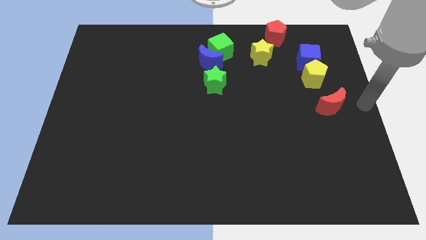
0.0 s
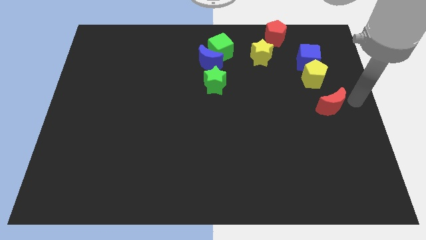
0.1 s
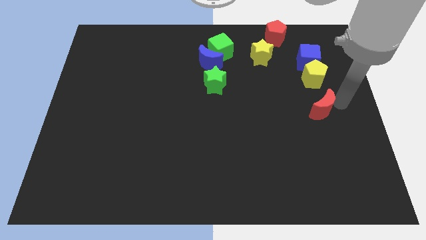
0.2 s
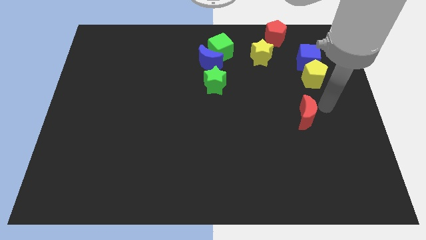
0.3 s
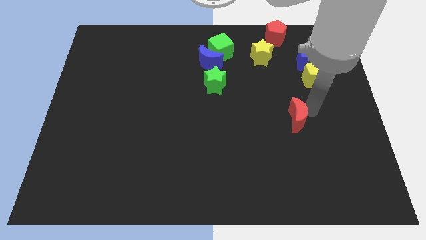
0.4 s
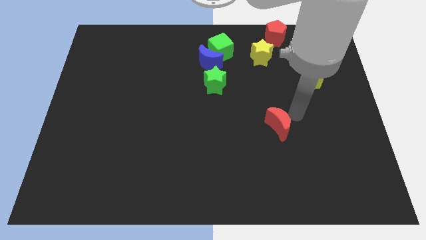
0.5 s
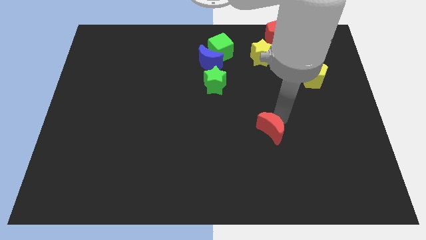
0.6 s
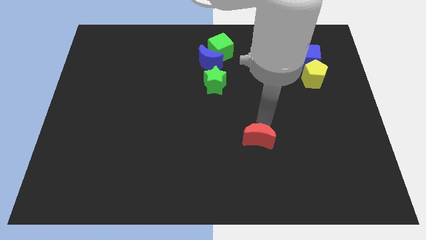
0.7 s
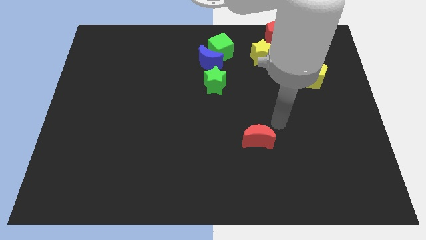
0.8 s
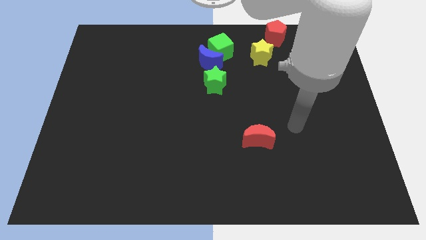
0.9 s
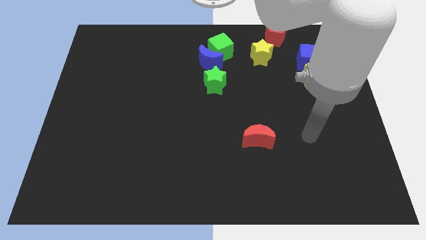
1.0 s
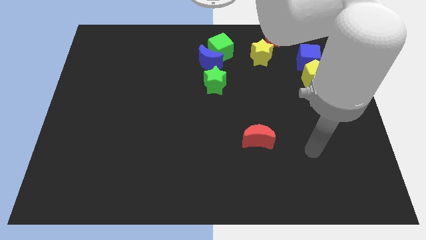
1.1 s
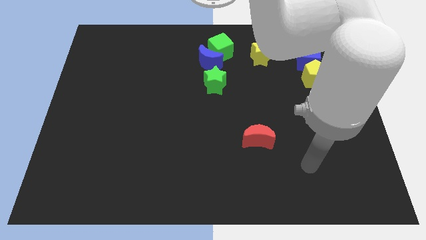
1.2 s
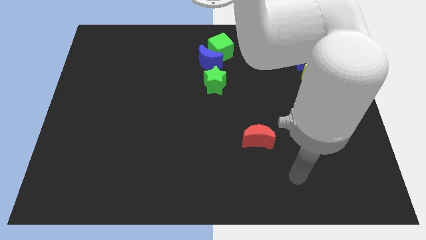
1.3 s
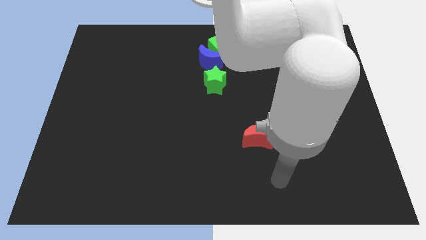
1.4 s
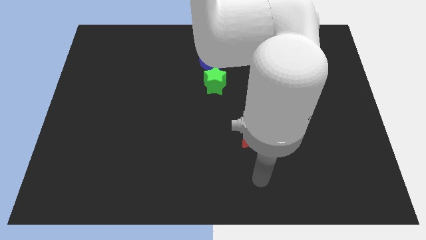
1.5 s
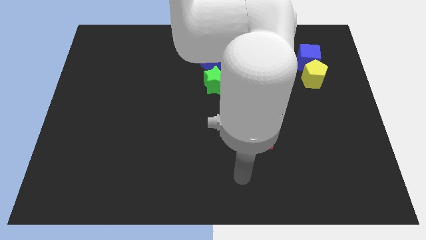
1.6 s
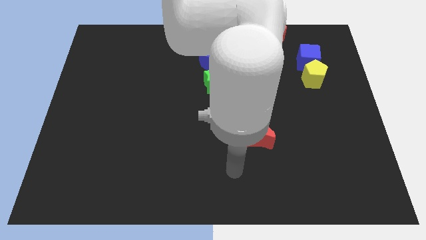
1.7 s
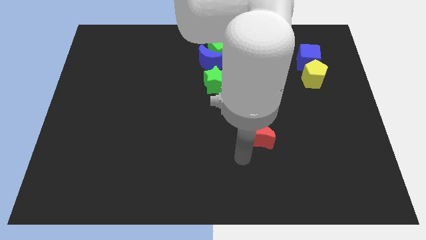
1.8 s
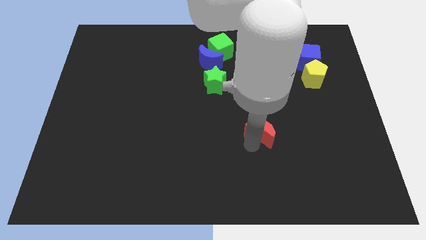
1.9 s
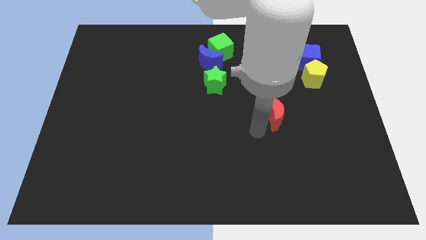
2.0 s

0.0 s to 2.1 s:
move the red crescent away from the yellow pentagon

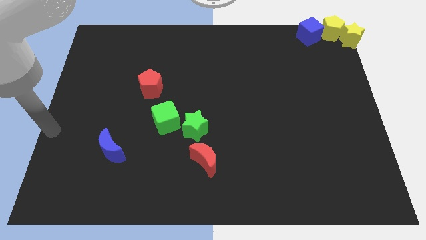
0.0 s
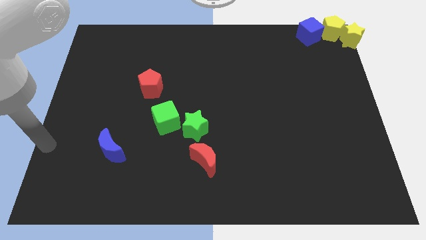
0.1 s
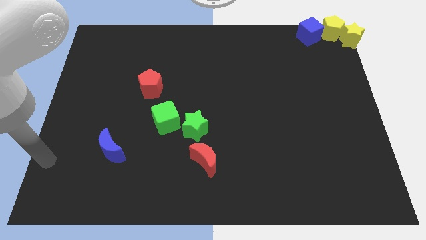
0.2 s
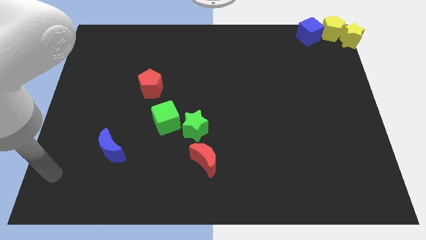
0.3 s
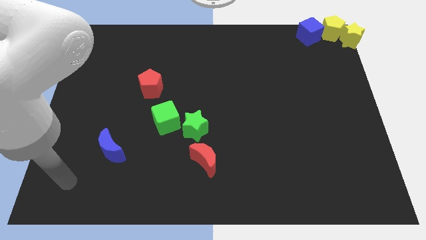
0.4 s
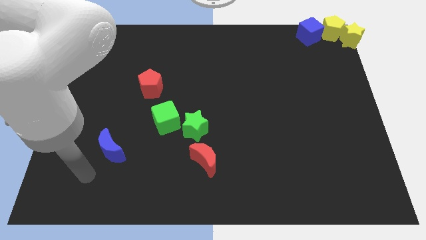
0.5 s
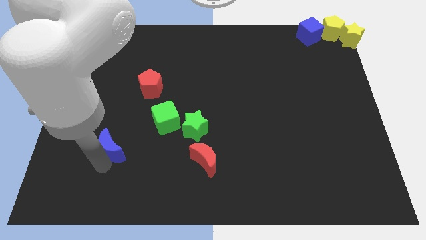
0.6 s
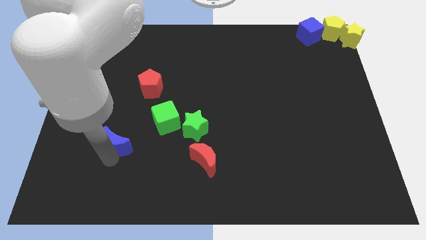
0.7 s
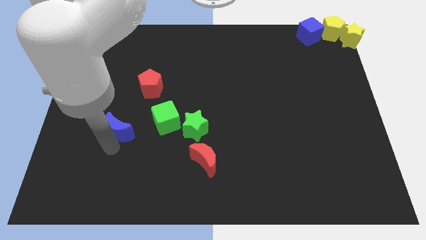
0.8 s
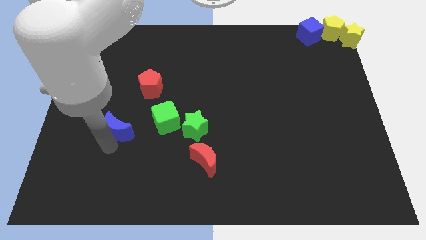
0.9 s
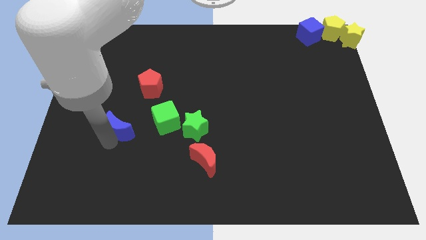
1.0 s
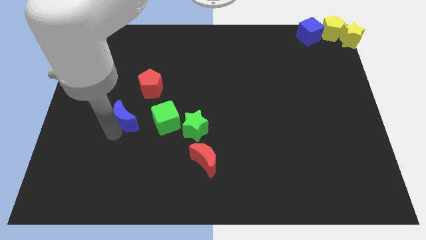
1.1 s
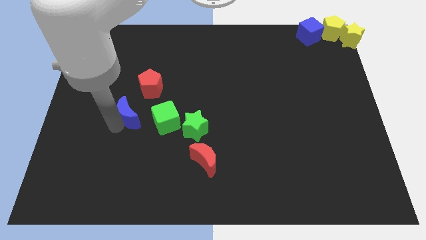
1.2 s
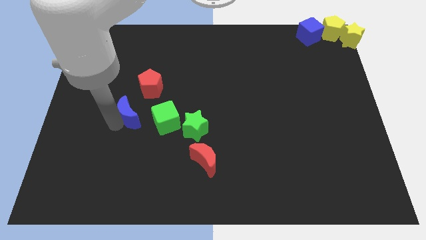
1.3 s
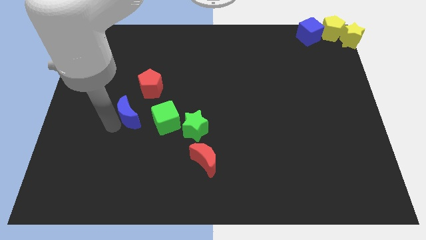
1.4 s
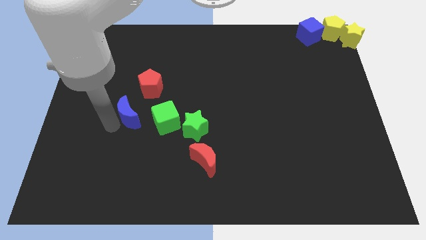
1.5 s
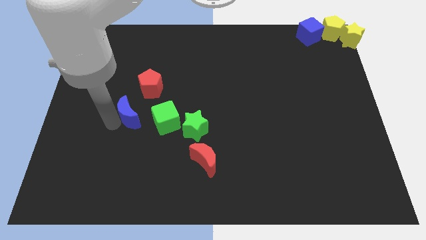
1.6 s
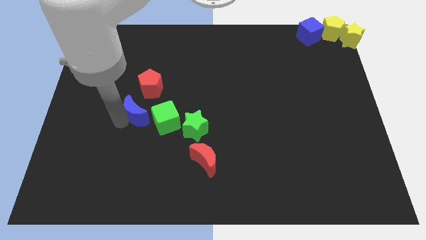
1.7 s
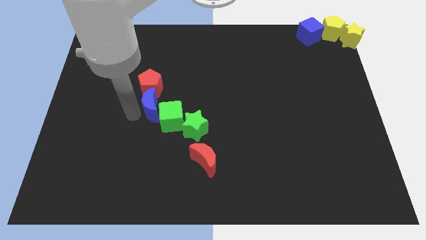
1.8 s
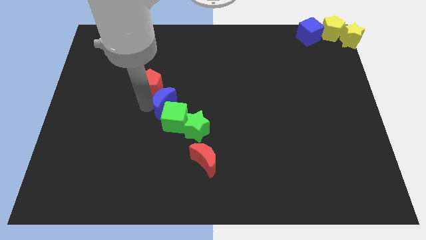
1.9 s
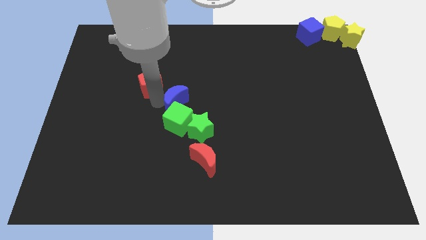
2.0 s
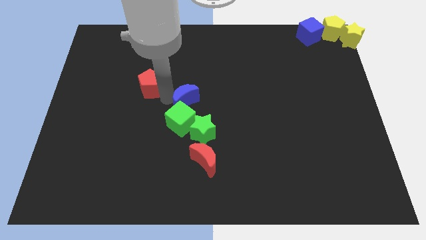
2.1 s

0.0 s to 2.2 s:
push the blue crescent to the top of the green cube

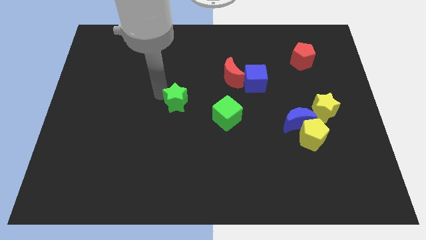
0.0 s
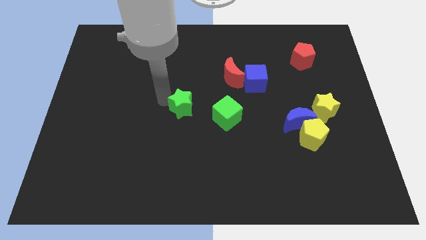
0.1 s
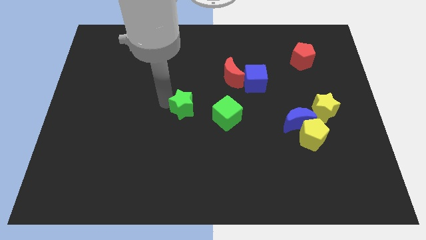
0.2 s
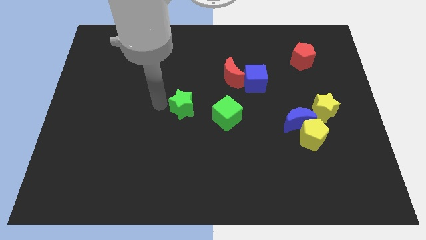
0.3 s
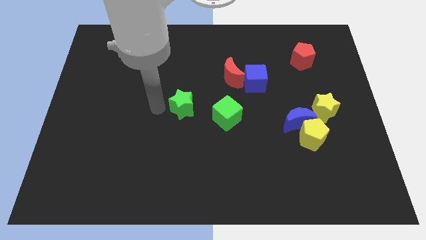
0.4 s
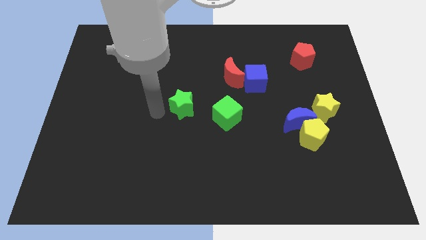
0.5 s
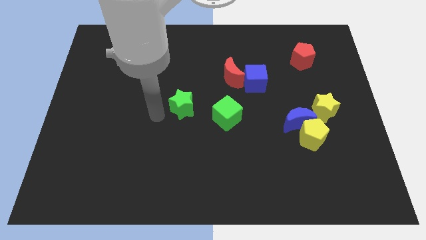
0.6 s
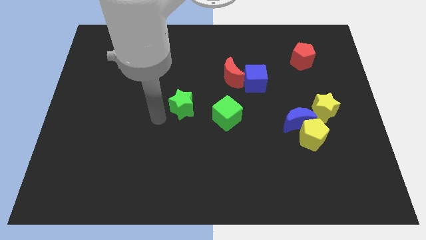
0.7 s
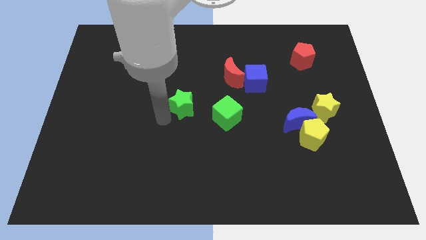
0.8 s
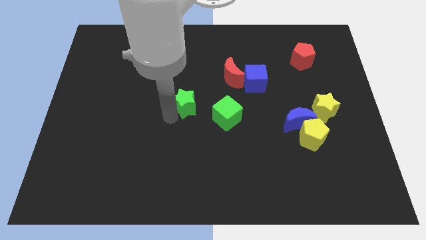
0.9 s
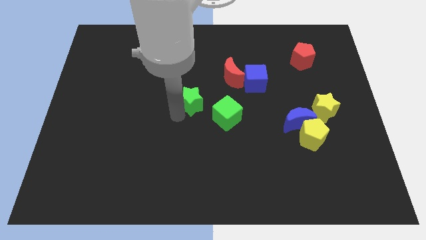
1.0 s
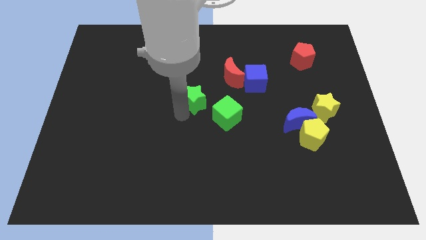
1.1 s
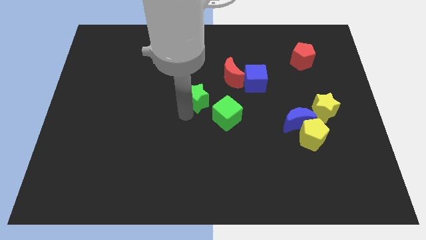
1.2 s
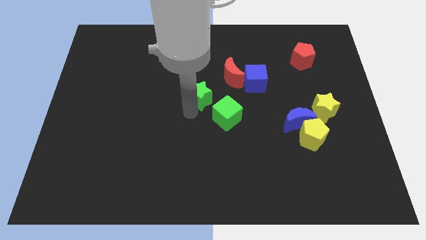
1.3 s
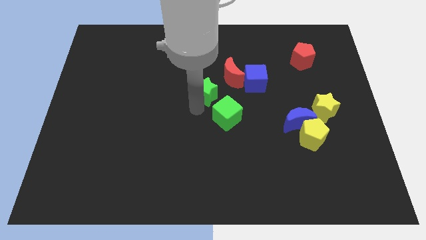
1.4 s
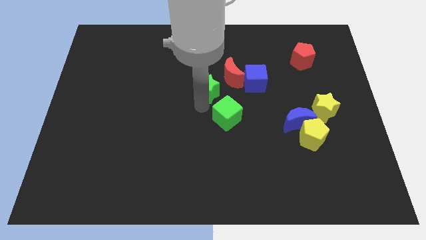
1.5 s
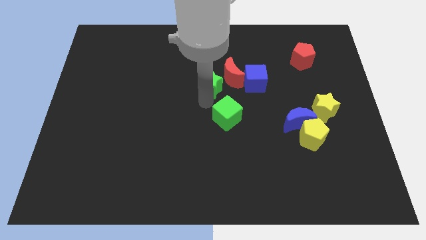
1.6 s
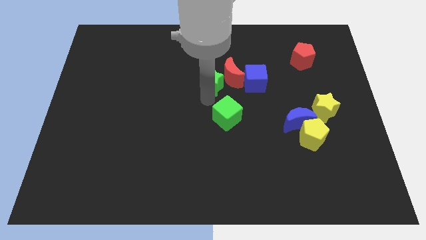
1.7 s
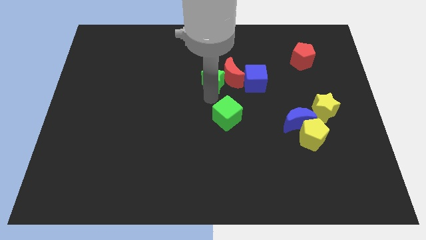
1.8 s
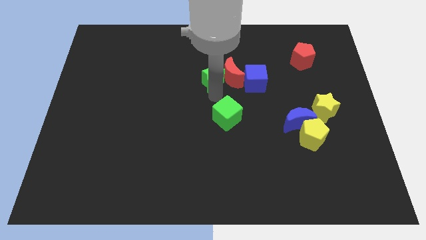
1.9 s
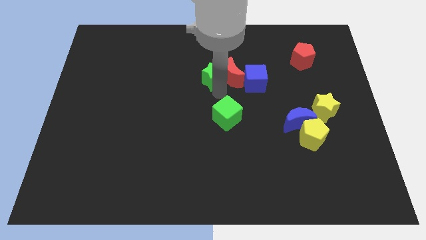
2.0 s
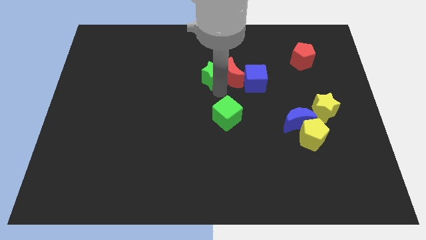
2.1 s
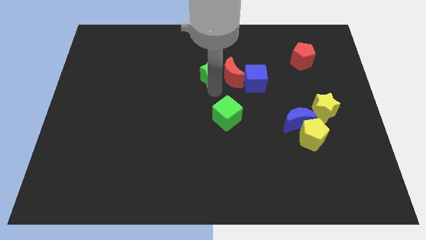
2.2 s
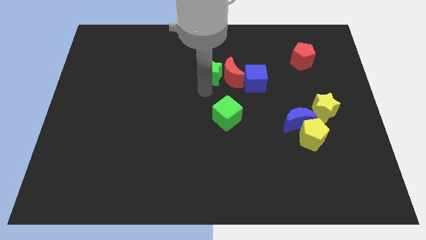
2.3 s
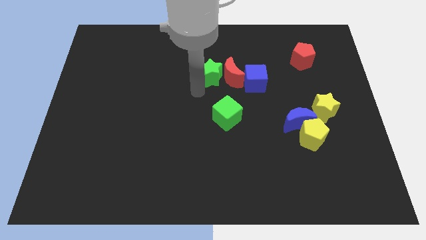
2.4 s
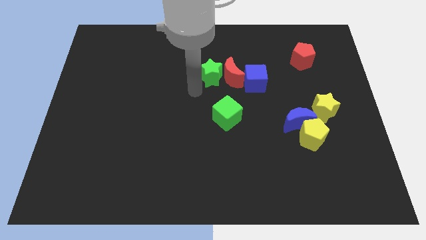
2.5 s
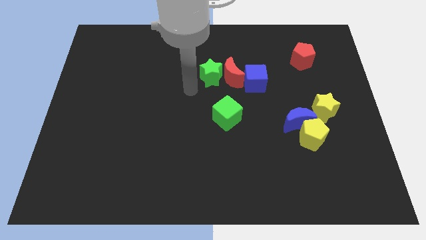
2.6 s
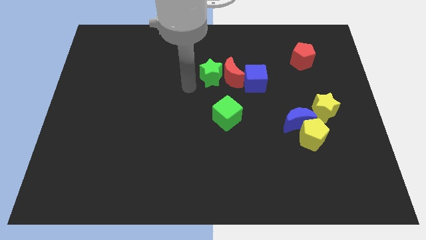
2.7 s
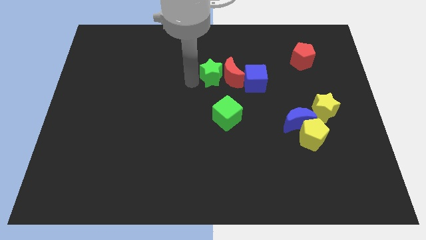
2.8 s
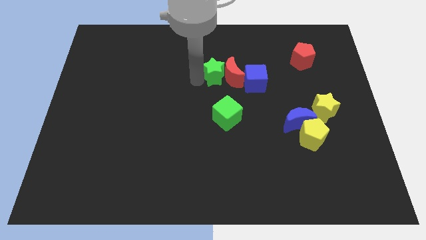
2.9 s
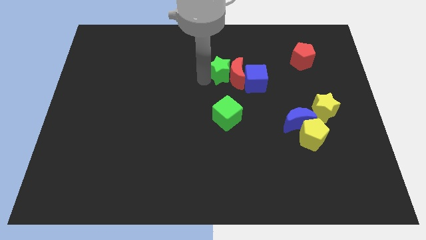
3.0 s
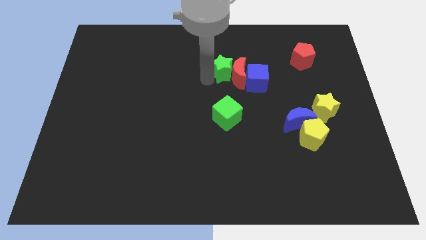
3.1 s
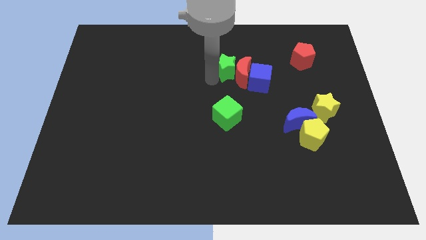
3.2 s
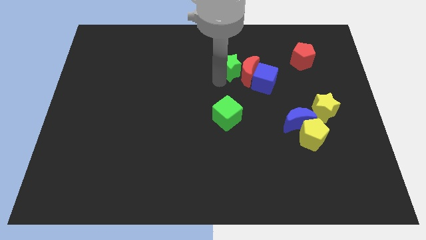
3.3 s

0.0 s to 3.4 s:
push the green star parallel to the green cube

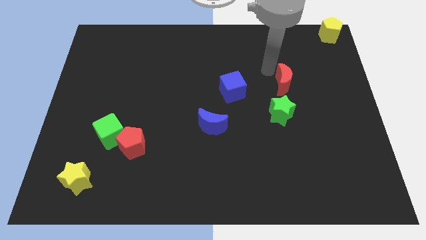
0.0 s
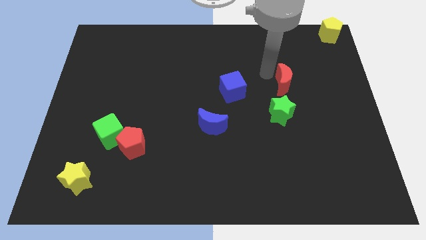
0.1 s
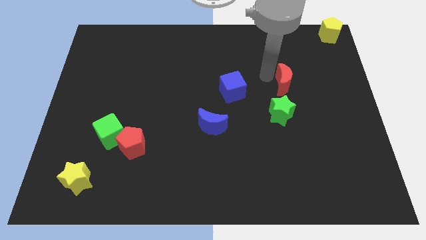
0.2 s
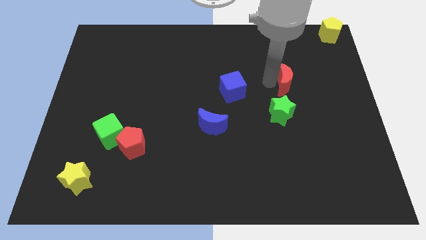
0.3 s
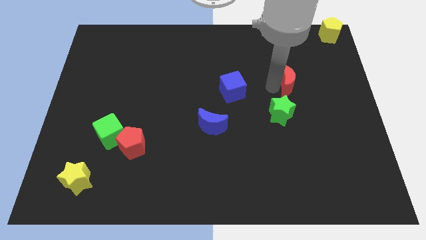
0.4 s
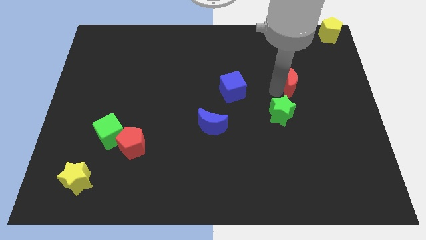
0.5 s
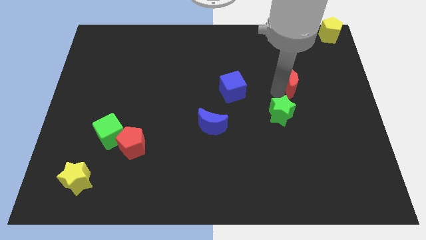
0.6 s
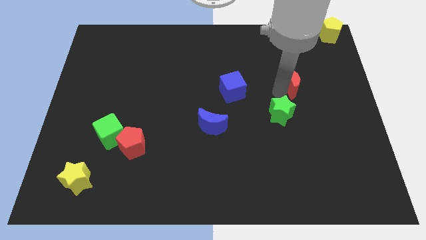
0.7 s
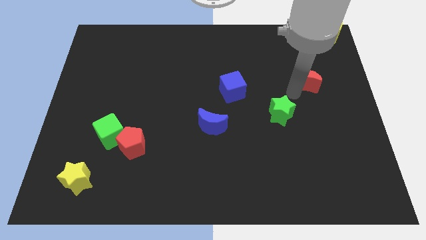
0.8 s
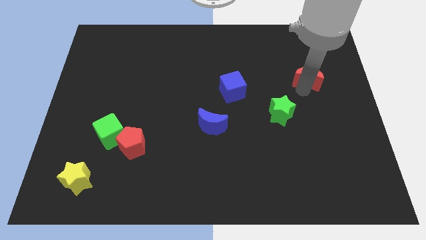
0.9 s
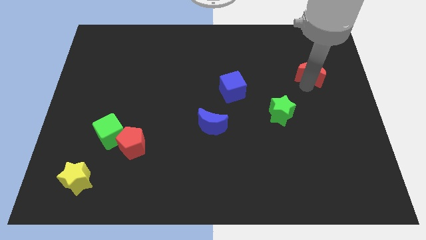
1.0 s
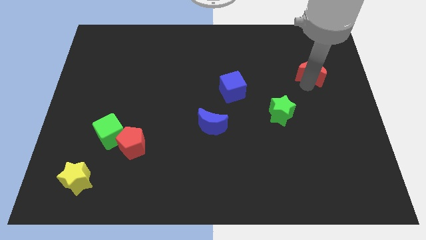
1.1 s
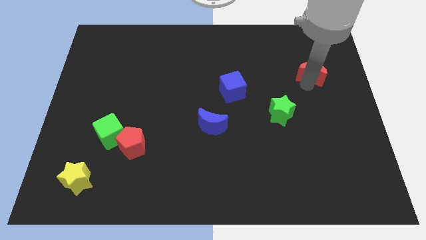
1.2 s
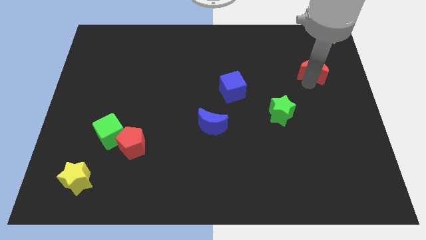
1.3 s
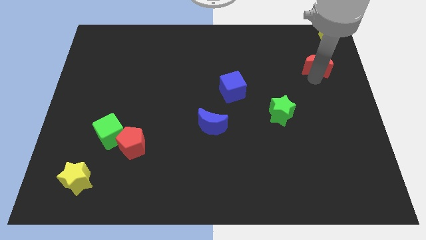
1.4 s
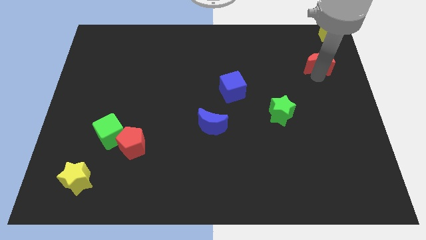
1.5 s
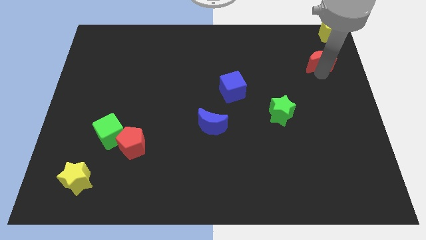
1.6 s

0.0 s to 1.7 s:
slide the red moon diagonally top right to the green star
